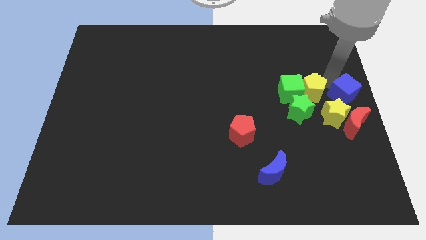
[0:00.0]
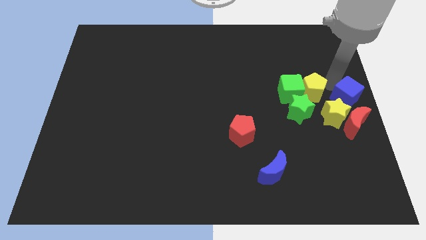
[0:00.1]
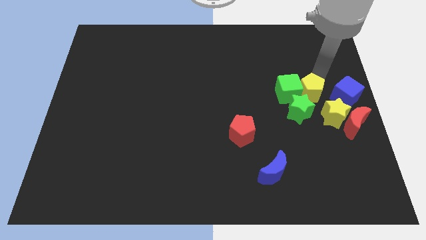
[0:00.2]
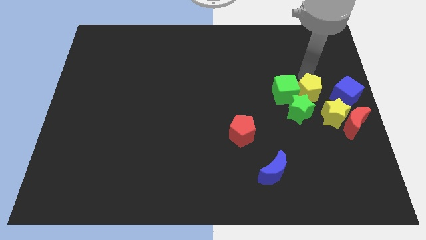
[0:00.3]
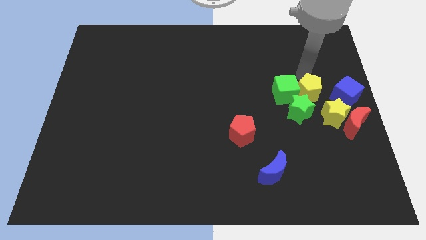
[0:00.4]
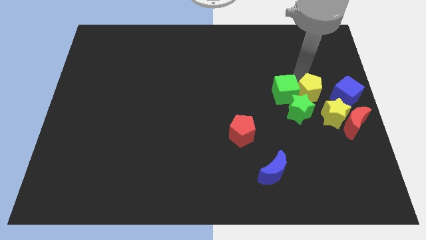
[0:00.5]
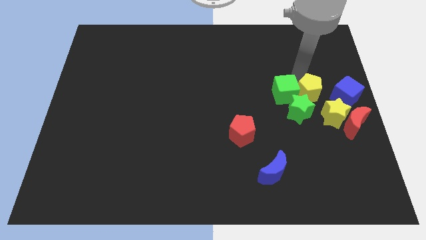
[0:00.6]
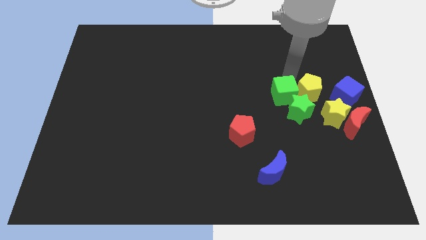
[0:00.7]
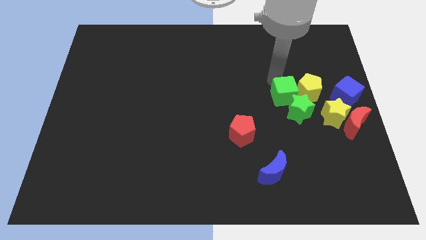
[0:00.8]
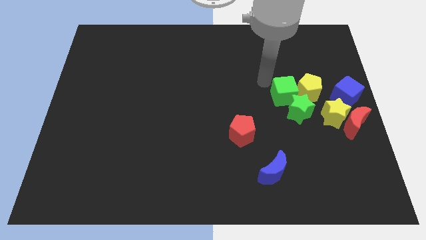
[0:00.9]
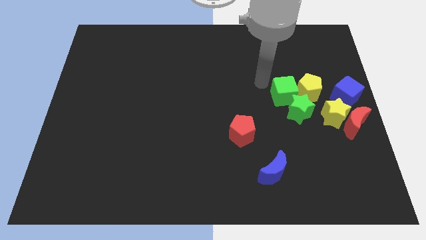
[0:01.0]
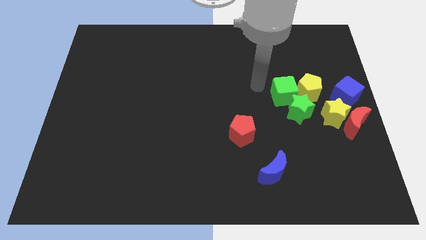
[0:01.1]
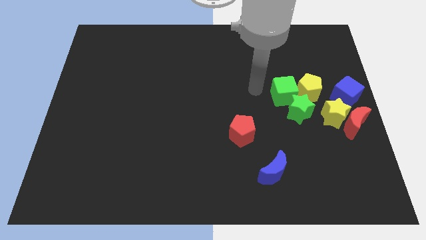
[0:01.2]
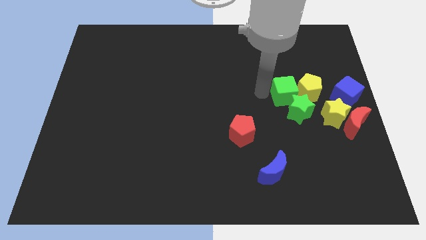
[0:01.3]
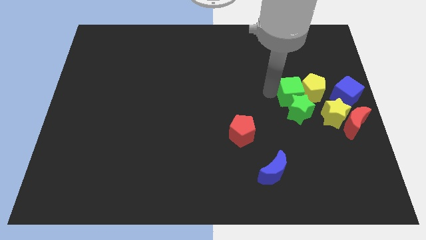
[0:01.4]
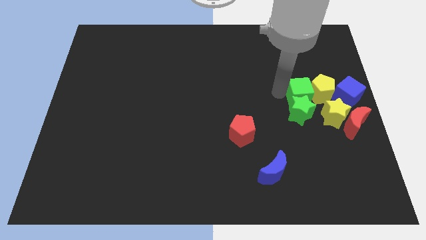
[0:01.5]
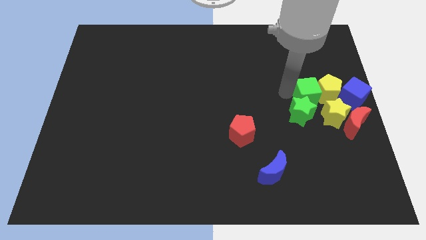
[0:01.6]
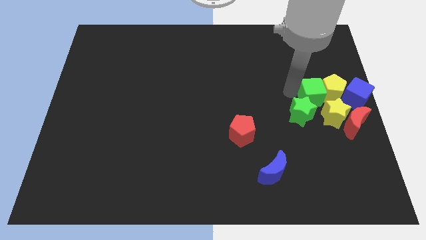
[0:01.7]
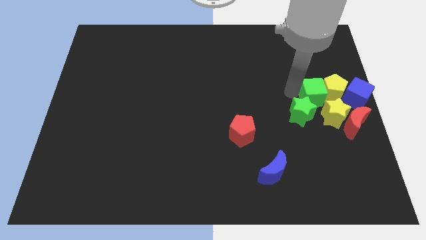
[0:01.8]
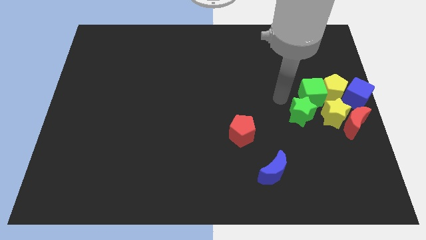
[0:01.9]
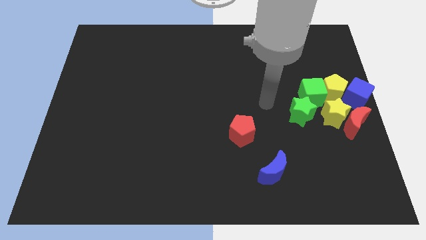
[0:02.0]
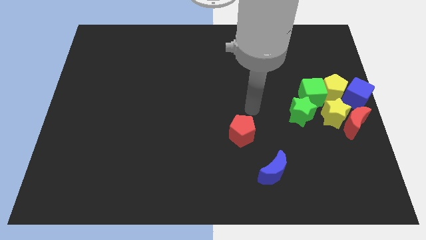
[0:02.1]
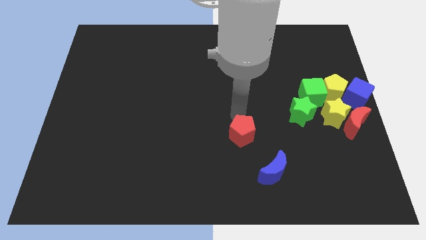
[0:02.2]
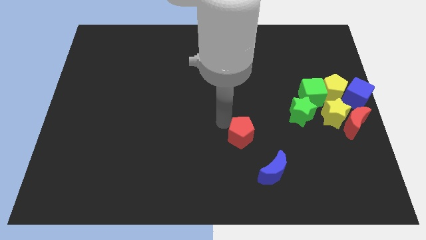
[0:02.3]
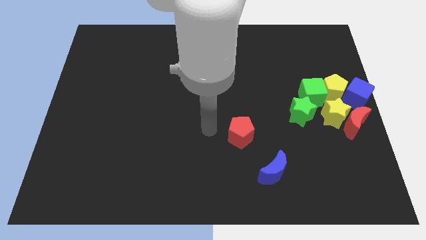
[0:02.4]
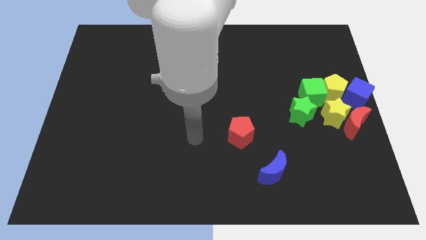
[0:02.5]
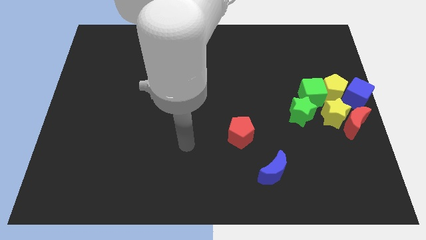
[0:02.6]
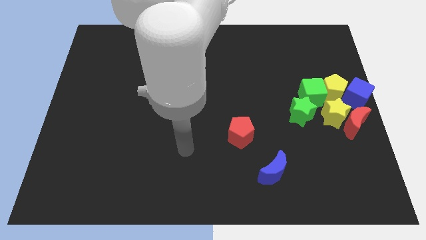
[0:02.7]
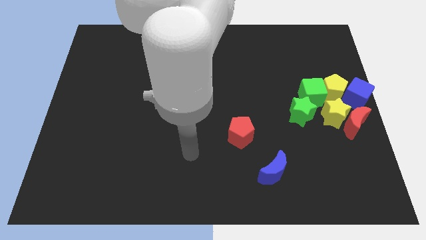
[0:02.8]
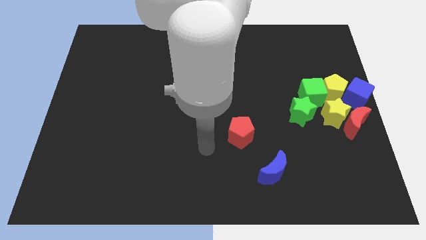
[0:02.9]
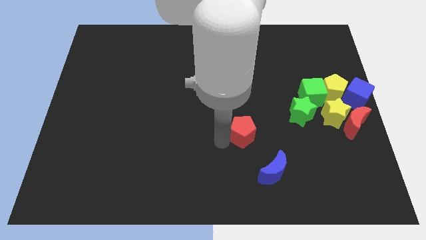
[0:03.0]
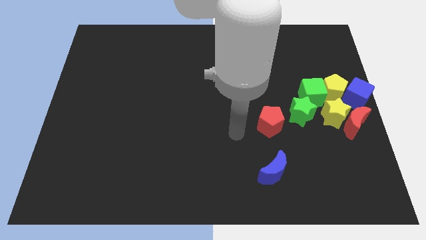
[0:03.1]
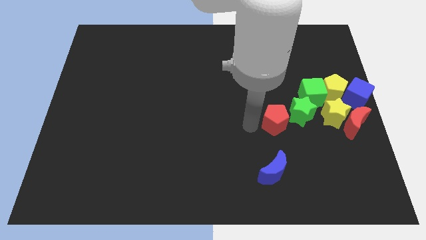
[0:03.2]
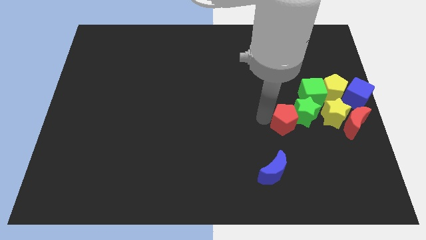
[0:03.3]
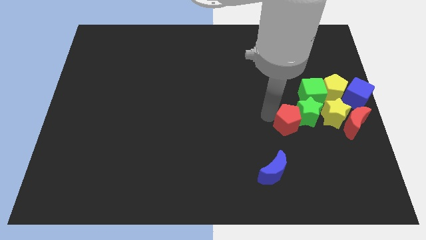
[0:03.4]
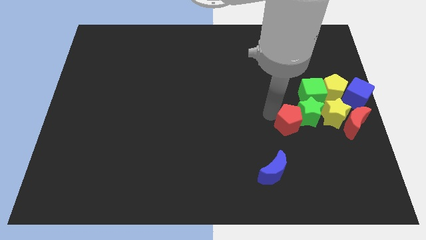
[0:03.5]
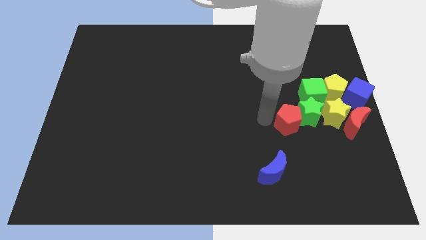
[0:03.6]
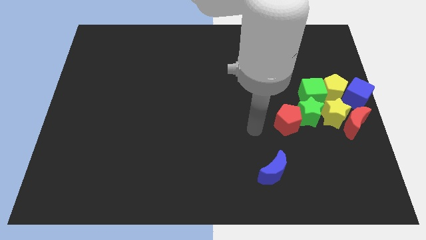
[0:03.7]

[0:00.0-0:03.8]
place the red pentagon left to the green star

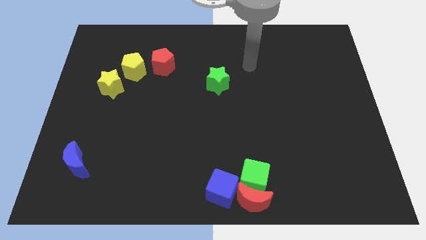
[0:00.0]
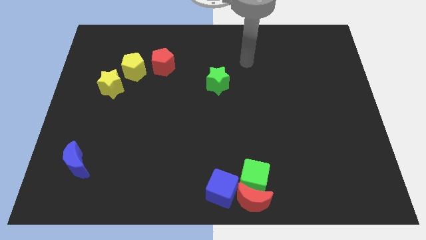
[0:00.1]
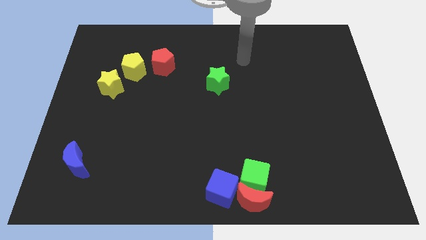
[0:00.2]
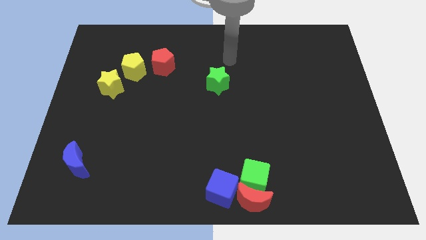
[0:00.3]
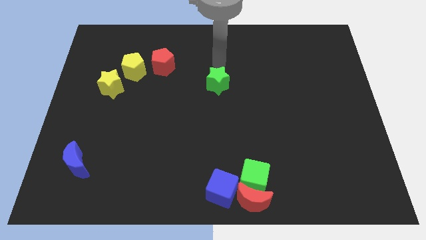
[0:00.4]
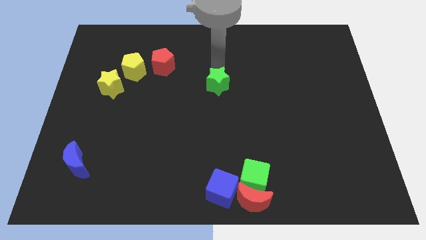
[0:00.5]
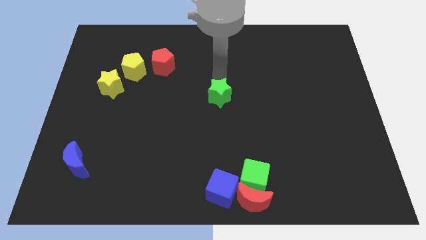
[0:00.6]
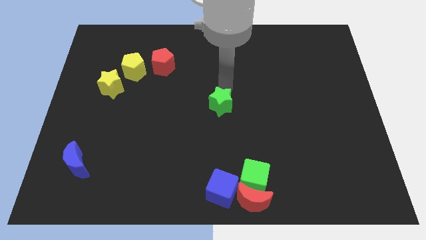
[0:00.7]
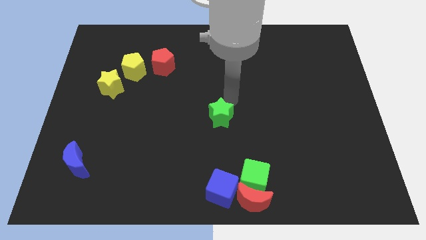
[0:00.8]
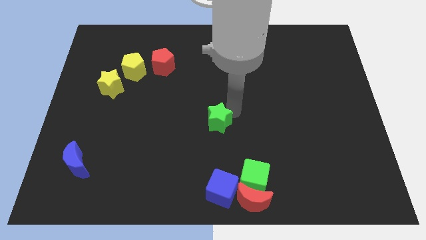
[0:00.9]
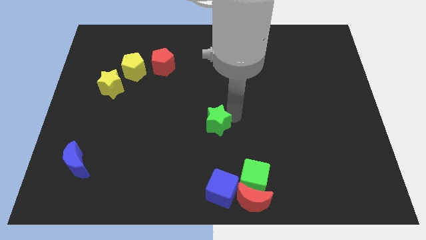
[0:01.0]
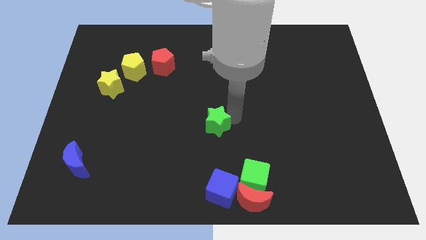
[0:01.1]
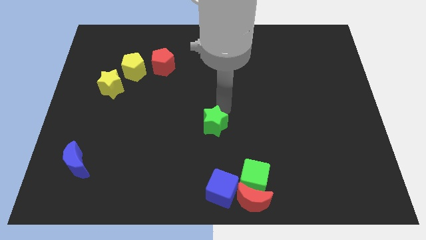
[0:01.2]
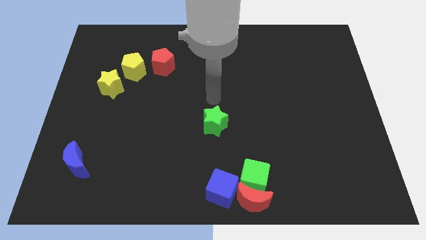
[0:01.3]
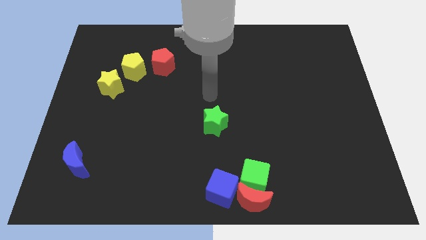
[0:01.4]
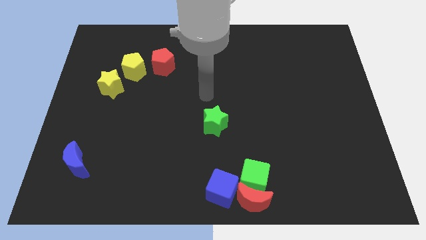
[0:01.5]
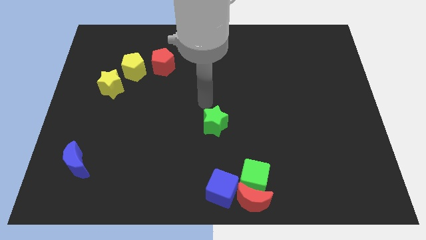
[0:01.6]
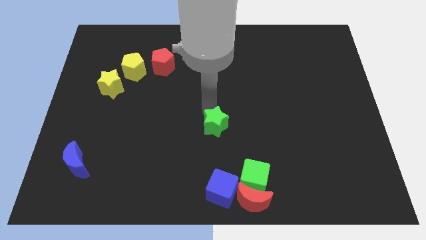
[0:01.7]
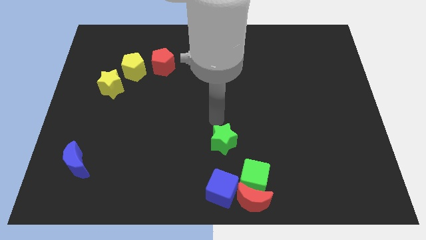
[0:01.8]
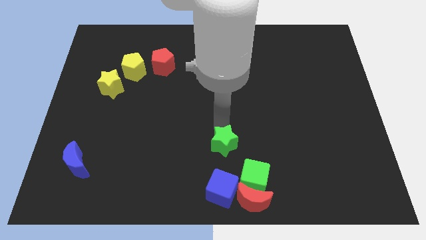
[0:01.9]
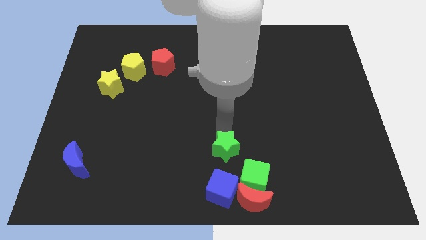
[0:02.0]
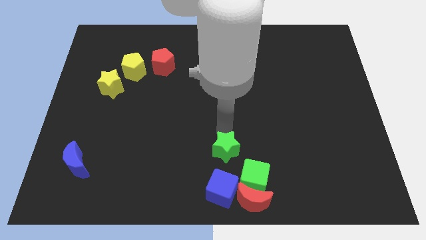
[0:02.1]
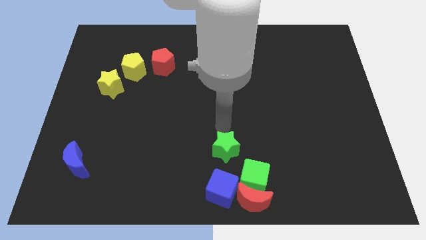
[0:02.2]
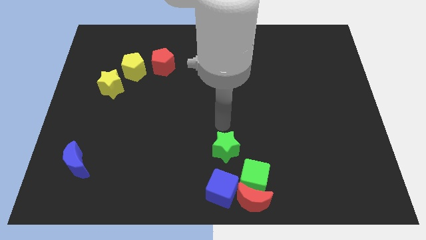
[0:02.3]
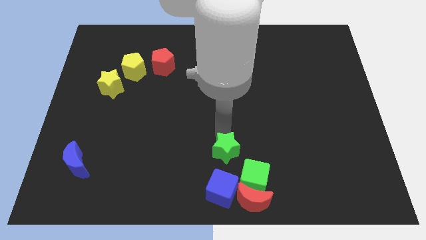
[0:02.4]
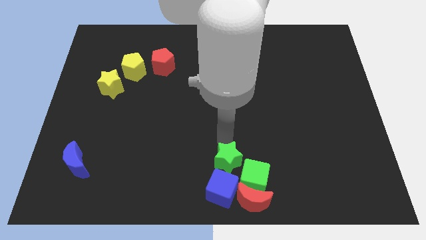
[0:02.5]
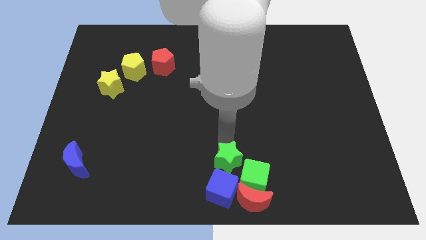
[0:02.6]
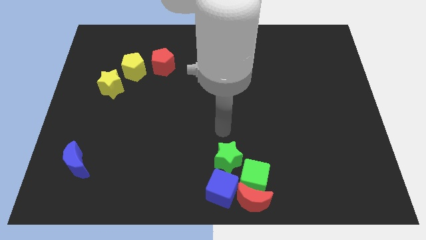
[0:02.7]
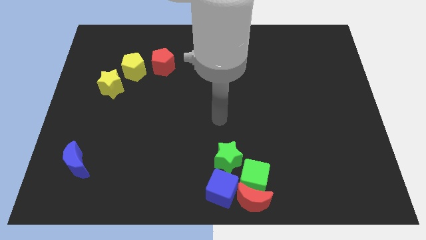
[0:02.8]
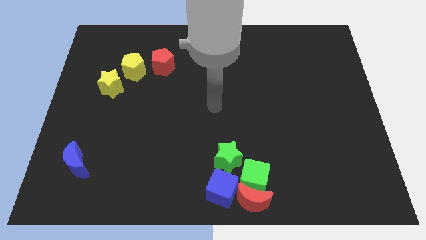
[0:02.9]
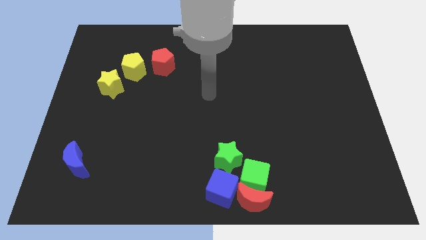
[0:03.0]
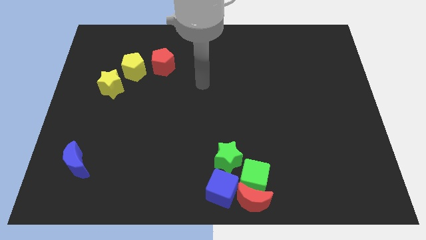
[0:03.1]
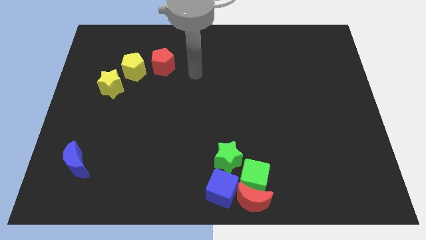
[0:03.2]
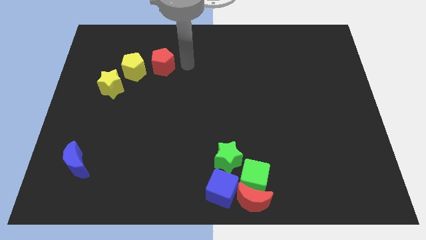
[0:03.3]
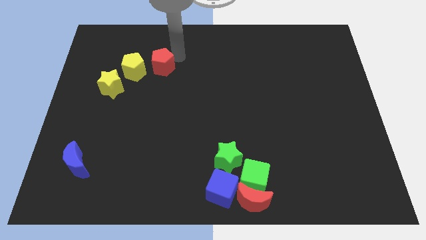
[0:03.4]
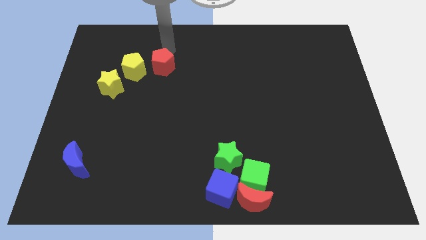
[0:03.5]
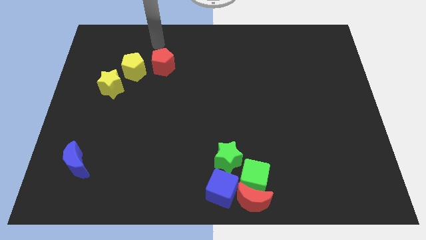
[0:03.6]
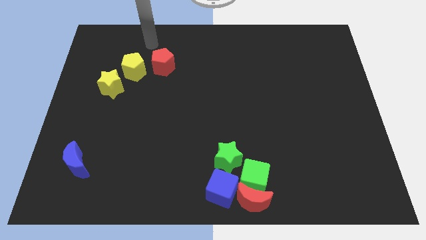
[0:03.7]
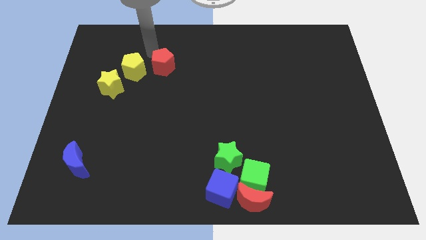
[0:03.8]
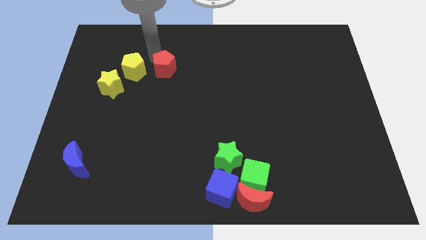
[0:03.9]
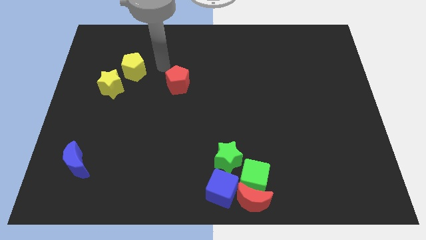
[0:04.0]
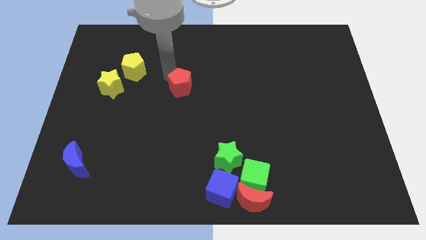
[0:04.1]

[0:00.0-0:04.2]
push the green star to the blue cube and green cube

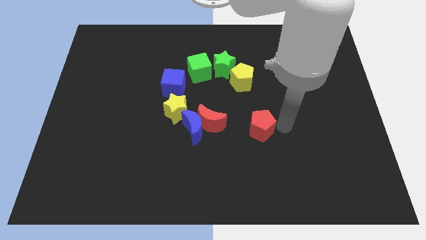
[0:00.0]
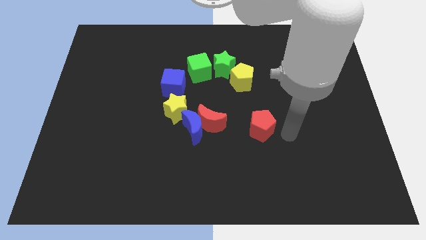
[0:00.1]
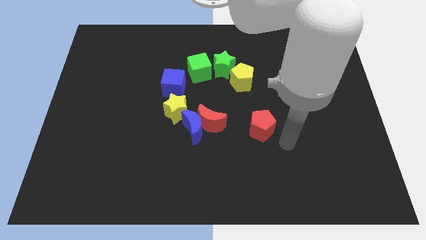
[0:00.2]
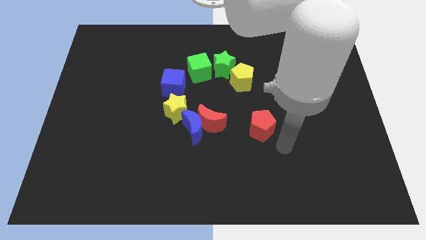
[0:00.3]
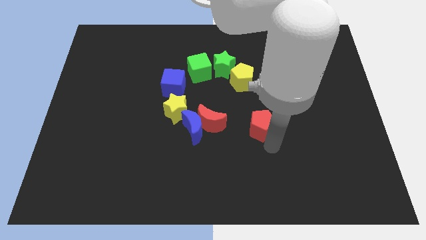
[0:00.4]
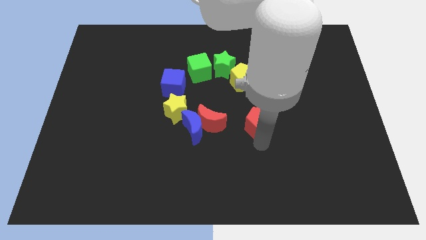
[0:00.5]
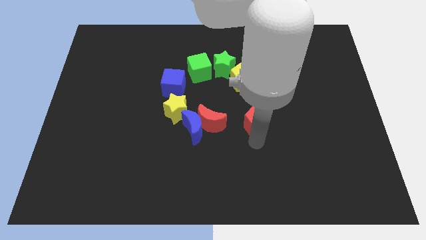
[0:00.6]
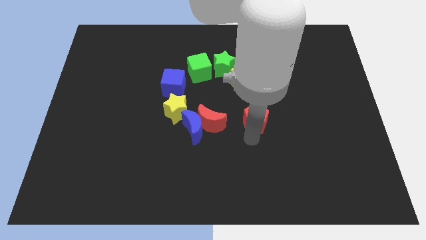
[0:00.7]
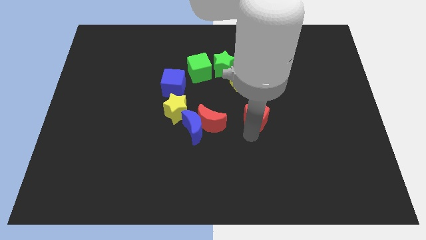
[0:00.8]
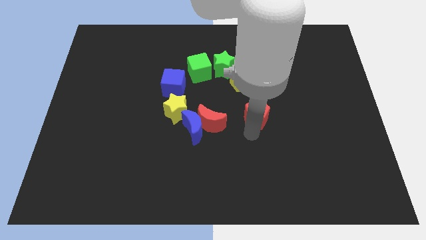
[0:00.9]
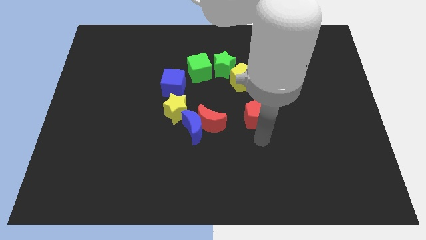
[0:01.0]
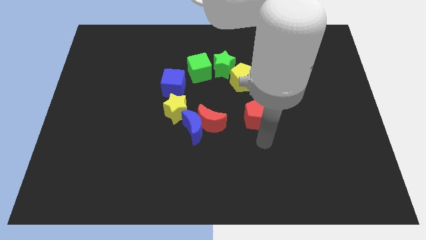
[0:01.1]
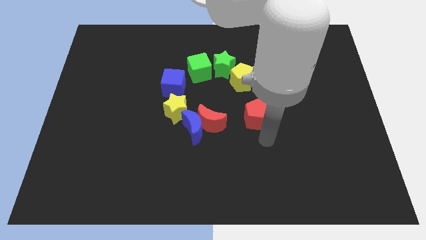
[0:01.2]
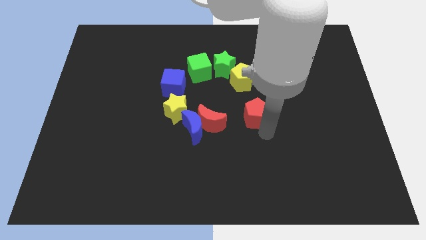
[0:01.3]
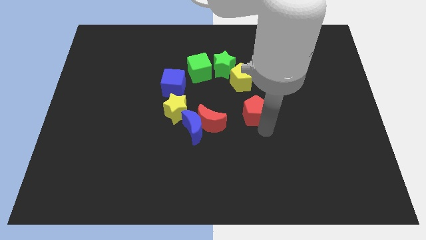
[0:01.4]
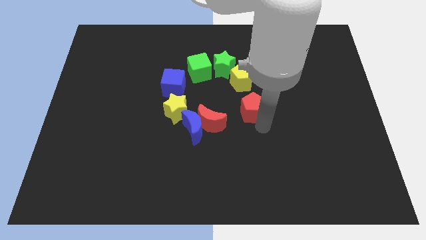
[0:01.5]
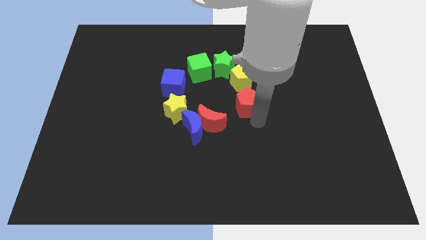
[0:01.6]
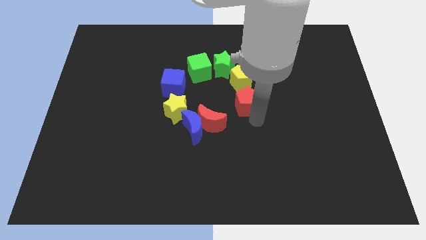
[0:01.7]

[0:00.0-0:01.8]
move red pentagon slightly to the center of the board
